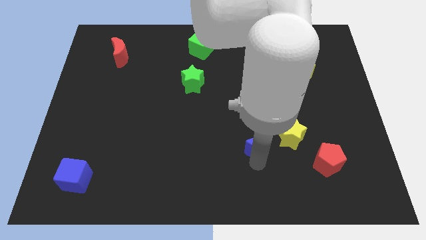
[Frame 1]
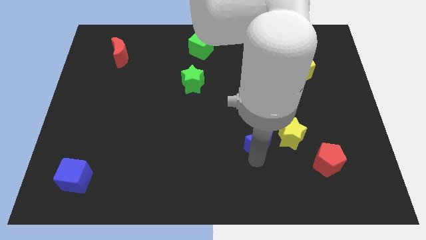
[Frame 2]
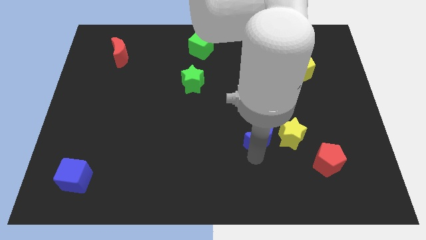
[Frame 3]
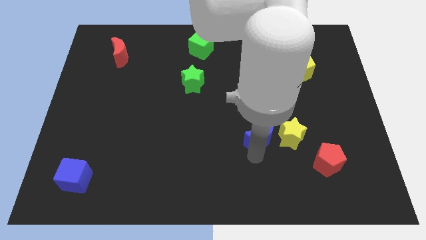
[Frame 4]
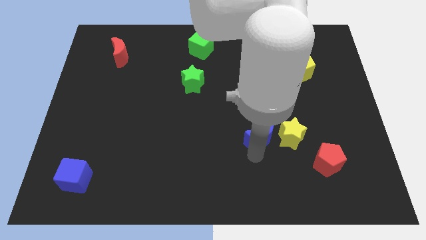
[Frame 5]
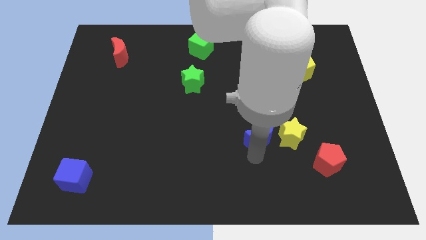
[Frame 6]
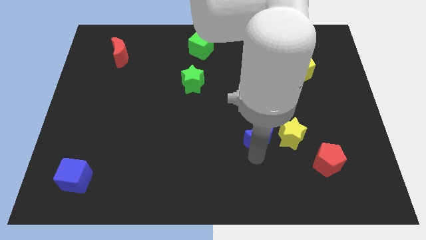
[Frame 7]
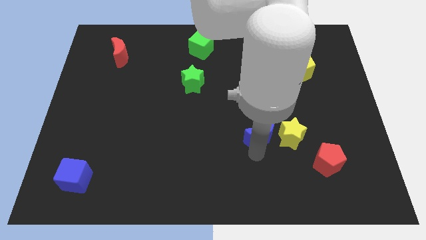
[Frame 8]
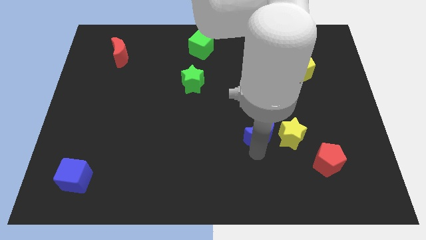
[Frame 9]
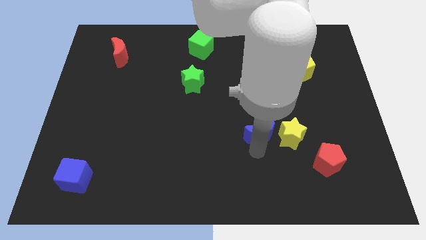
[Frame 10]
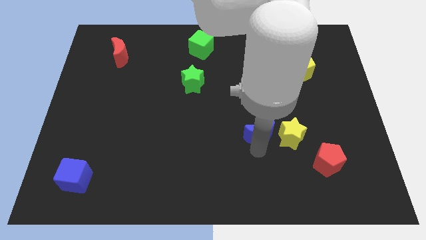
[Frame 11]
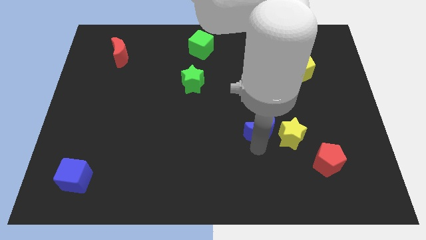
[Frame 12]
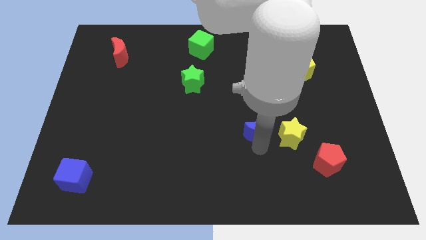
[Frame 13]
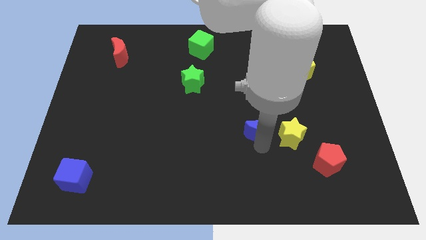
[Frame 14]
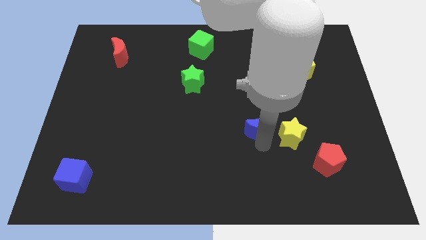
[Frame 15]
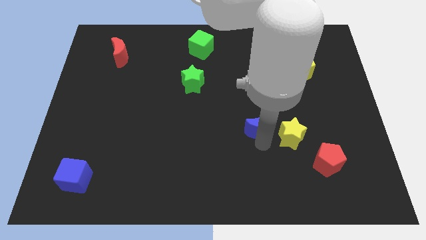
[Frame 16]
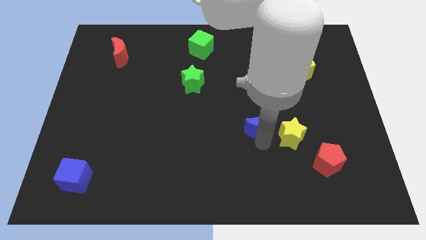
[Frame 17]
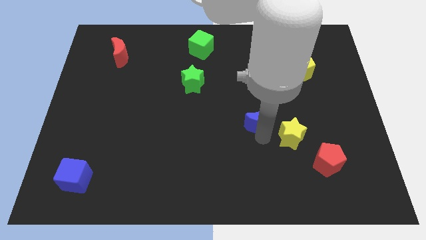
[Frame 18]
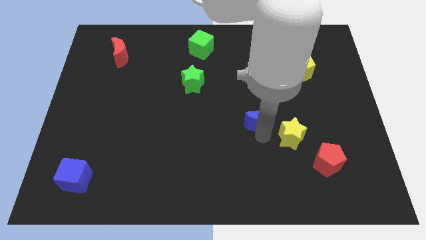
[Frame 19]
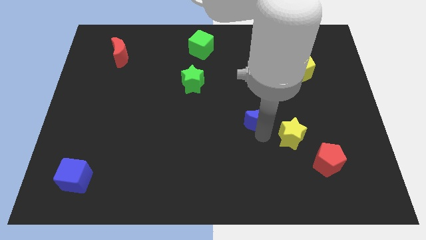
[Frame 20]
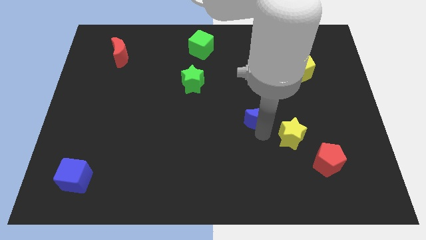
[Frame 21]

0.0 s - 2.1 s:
separate the blue crescent from the yellow star

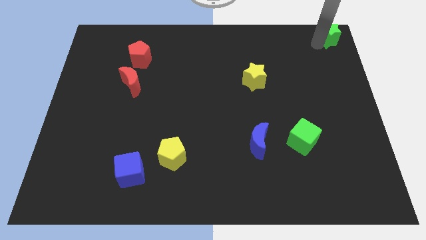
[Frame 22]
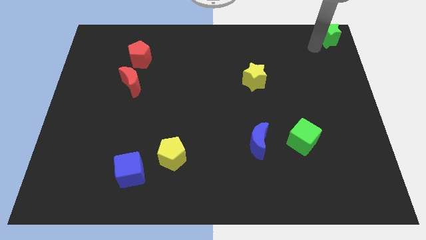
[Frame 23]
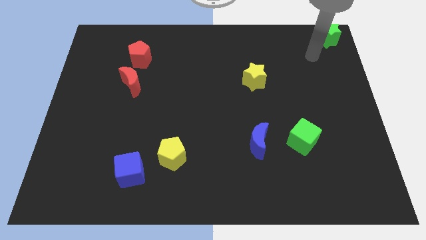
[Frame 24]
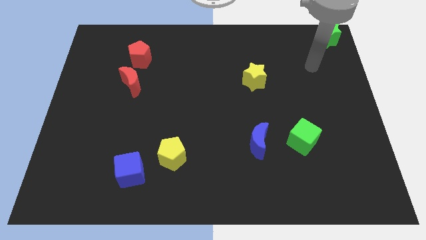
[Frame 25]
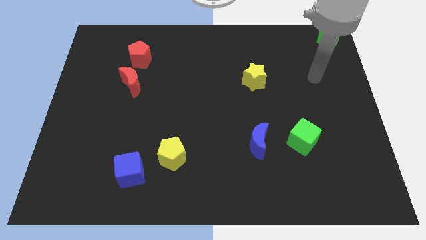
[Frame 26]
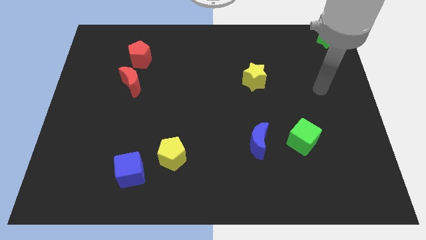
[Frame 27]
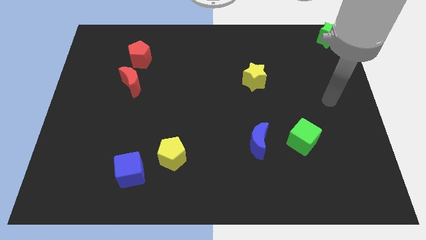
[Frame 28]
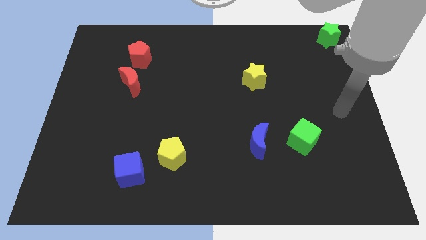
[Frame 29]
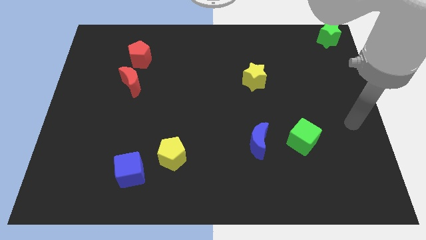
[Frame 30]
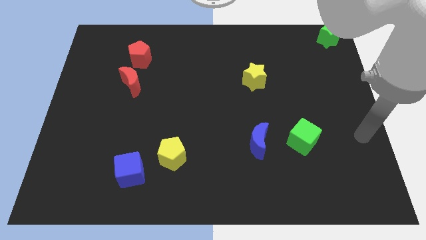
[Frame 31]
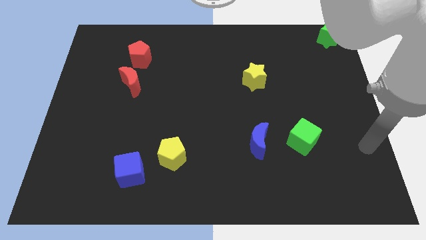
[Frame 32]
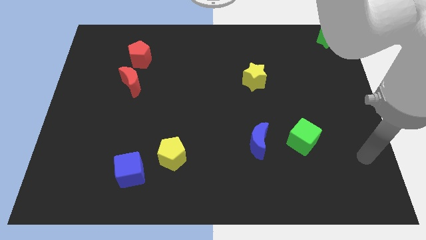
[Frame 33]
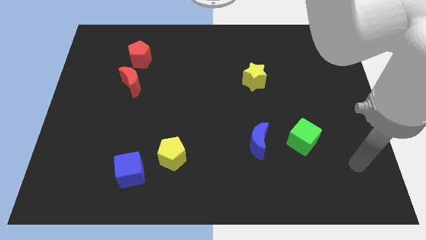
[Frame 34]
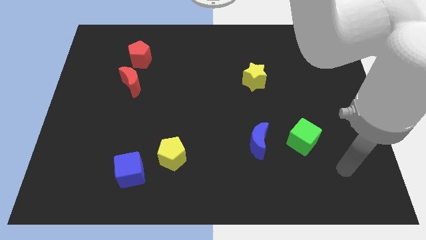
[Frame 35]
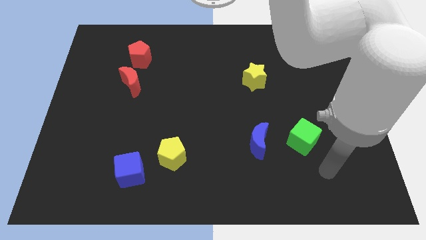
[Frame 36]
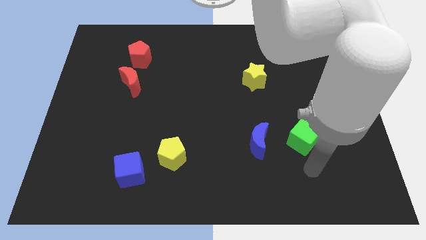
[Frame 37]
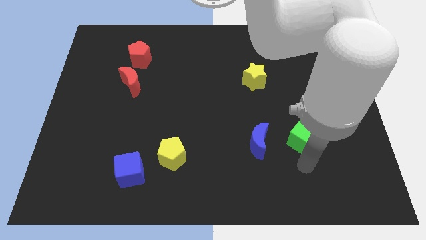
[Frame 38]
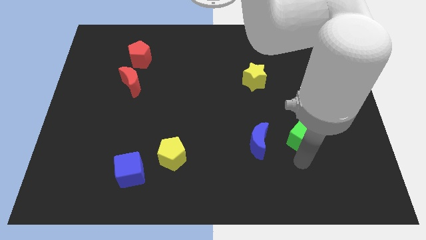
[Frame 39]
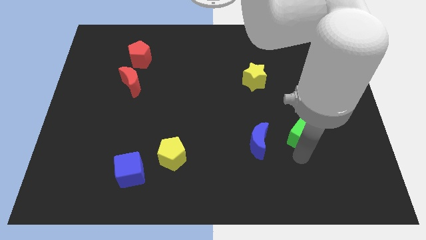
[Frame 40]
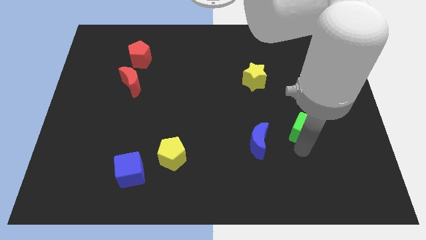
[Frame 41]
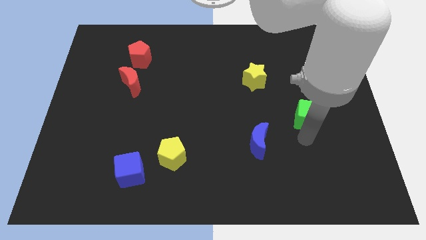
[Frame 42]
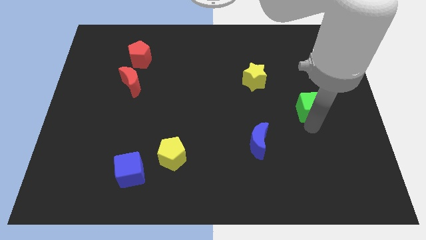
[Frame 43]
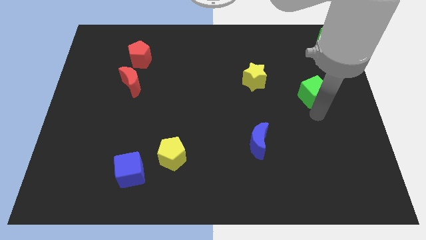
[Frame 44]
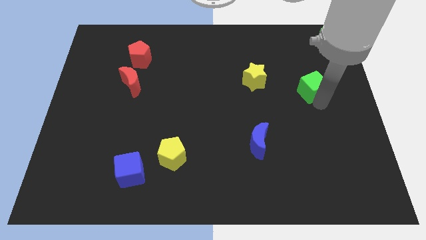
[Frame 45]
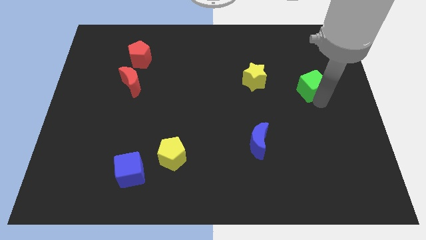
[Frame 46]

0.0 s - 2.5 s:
push the green cube towards the top side of the board

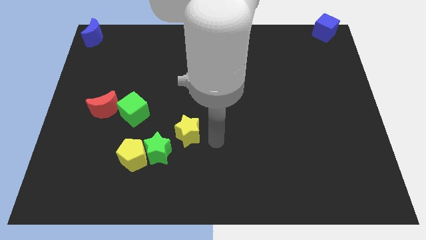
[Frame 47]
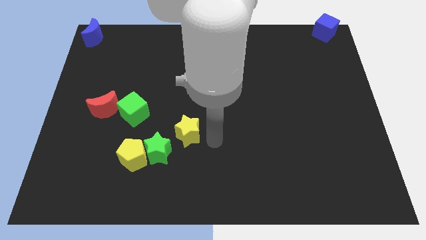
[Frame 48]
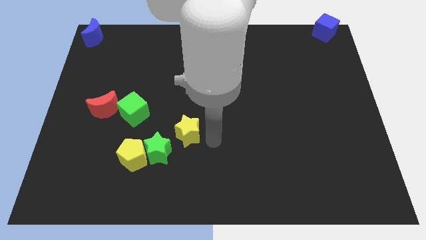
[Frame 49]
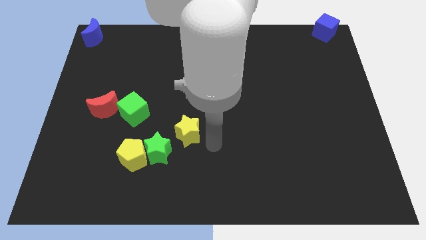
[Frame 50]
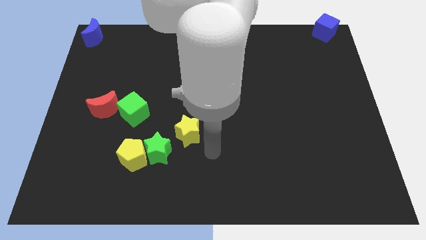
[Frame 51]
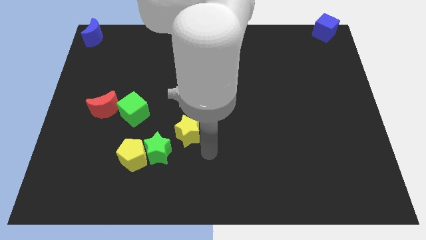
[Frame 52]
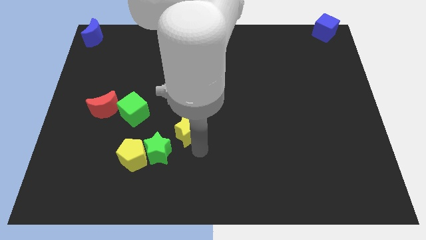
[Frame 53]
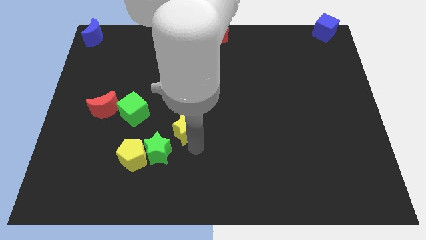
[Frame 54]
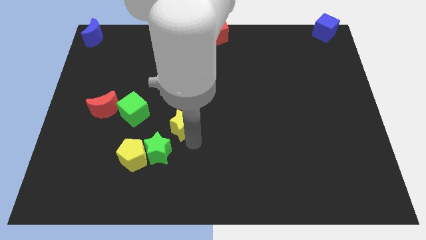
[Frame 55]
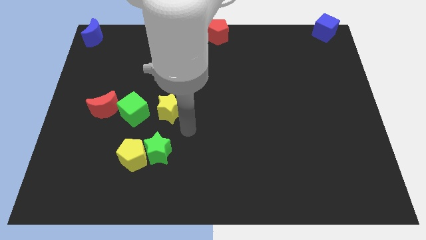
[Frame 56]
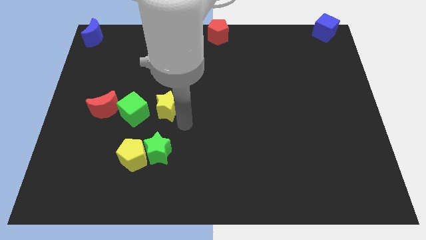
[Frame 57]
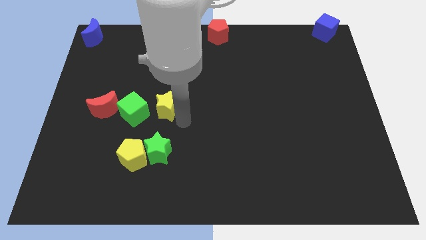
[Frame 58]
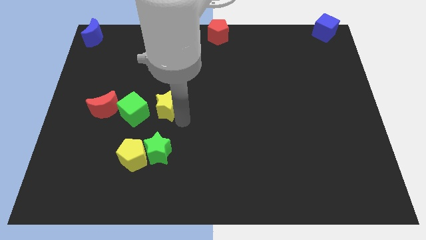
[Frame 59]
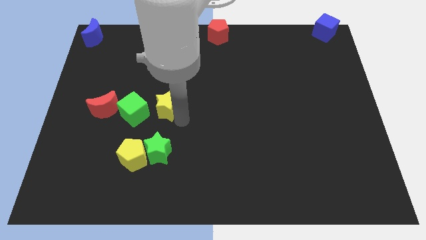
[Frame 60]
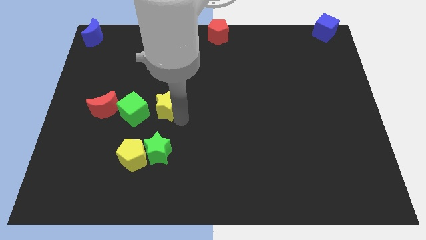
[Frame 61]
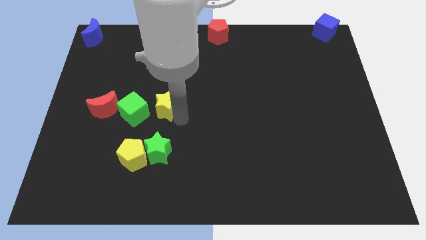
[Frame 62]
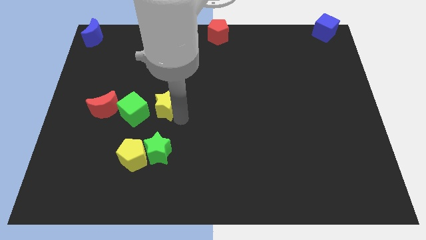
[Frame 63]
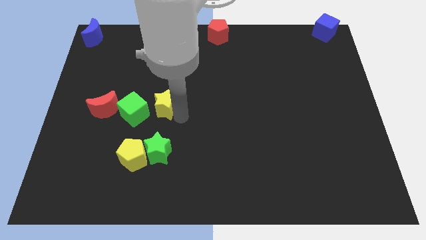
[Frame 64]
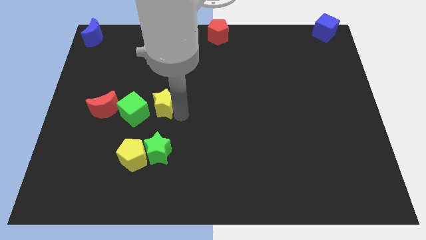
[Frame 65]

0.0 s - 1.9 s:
put the yellow star right to the green cube

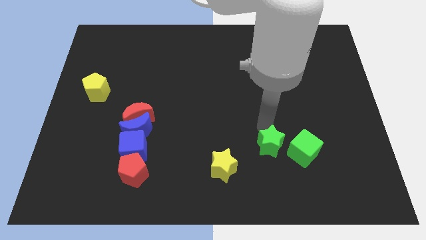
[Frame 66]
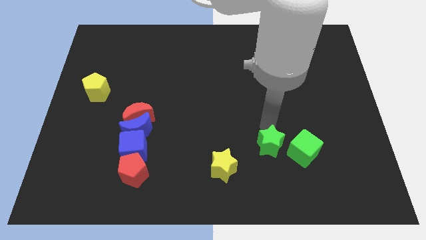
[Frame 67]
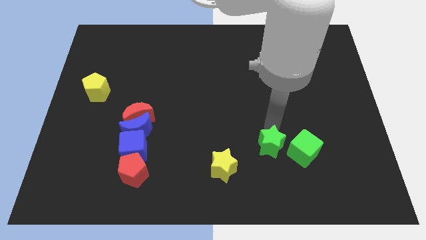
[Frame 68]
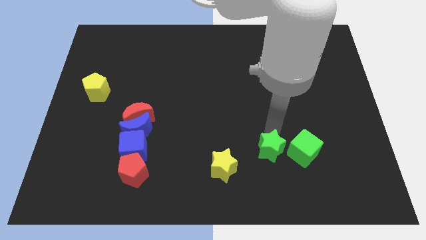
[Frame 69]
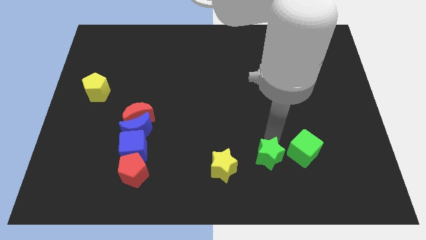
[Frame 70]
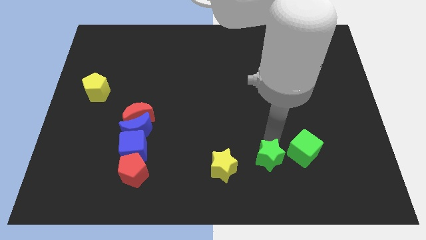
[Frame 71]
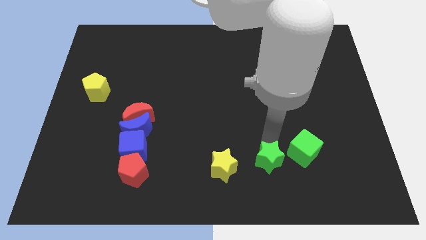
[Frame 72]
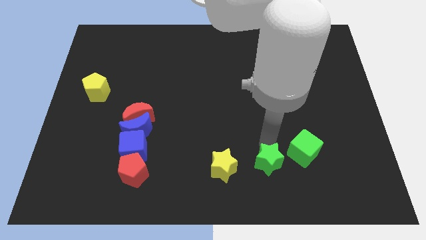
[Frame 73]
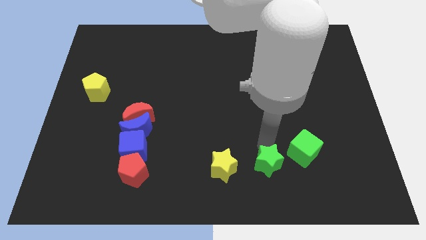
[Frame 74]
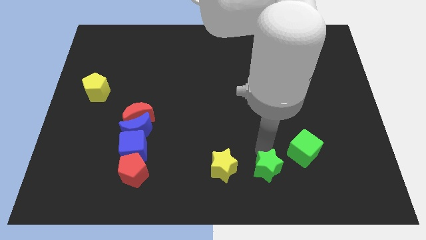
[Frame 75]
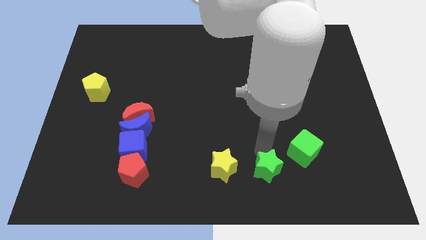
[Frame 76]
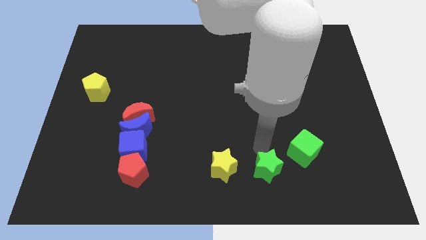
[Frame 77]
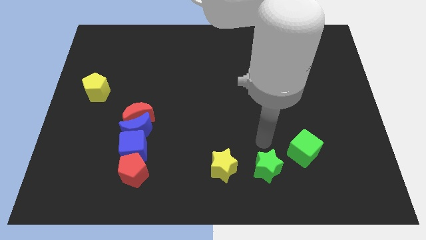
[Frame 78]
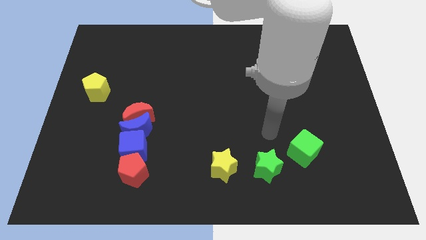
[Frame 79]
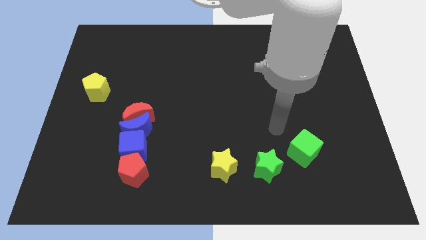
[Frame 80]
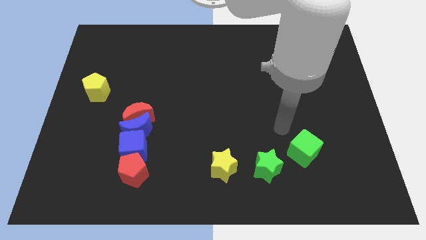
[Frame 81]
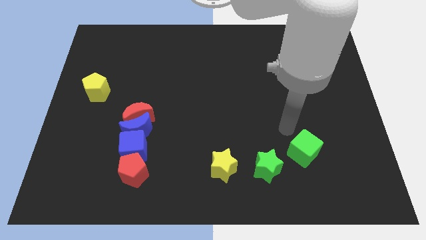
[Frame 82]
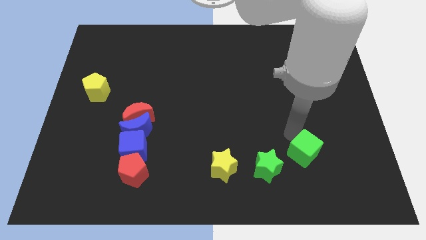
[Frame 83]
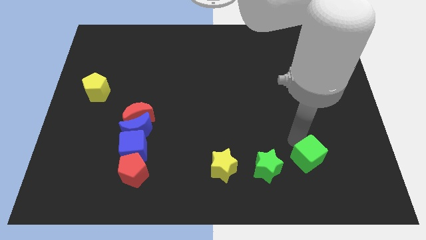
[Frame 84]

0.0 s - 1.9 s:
push the green star beside the yellow star

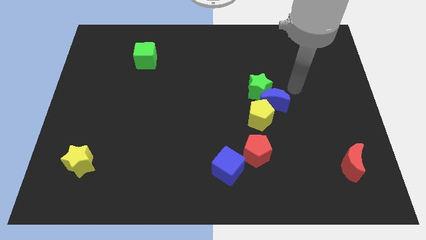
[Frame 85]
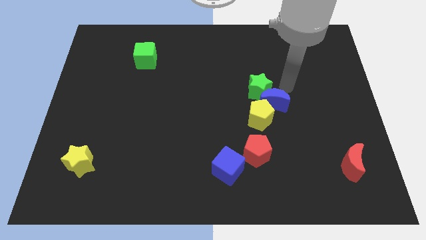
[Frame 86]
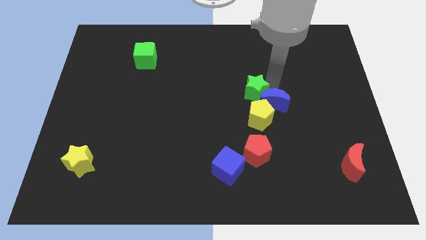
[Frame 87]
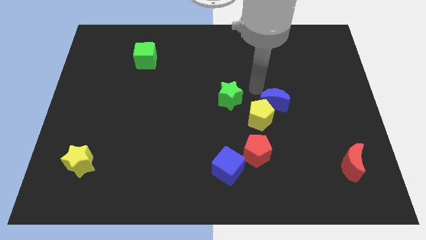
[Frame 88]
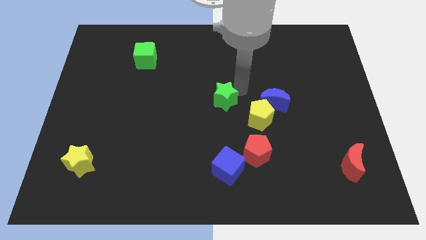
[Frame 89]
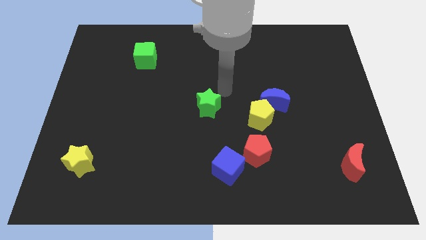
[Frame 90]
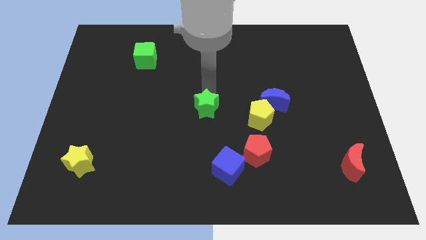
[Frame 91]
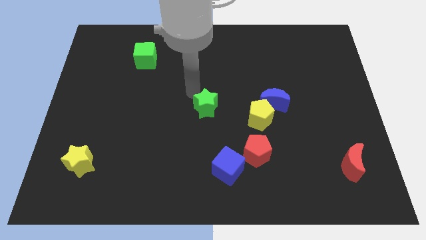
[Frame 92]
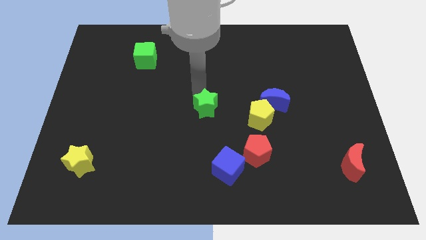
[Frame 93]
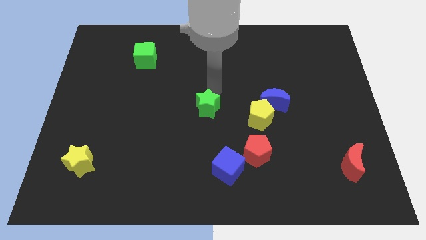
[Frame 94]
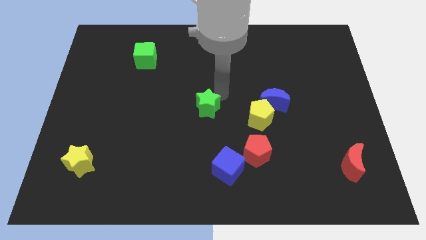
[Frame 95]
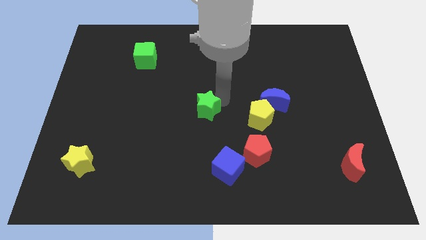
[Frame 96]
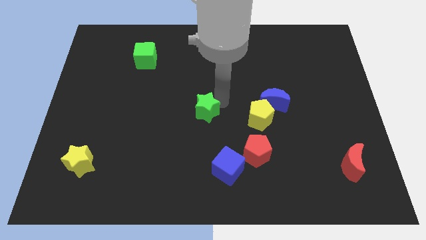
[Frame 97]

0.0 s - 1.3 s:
slide green star to the center of the board
